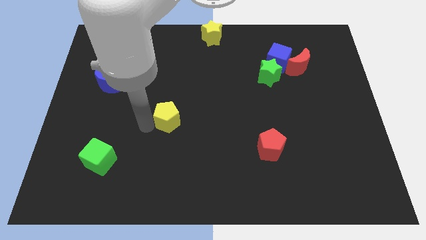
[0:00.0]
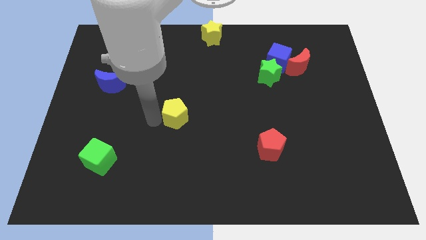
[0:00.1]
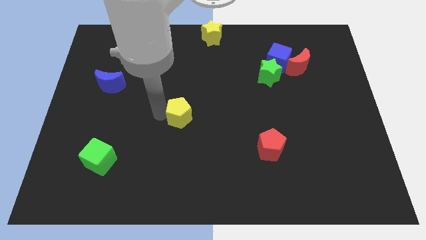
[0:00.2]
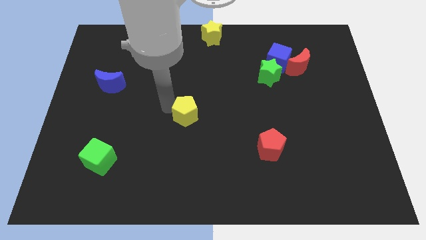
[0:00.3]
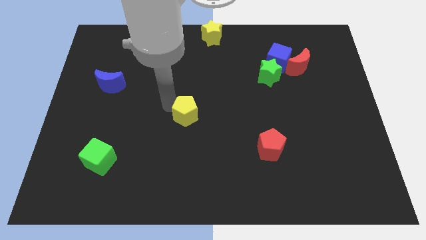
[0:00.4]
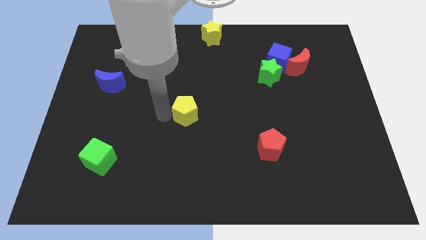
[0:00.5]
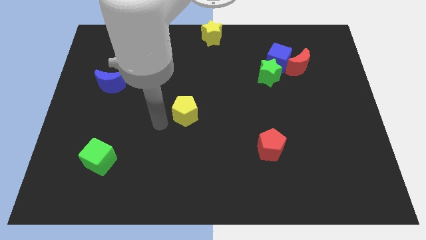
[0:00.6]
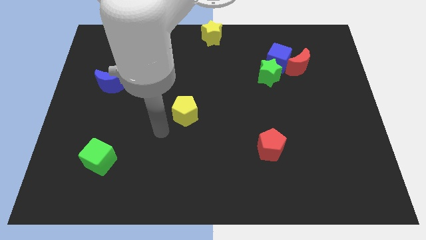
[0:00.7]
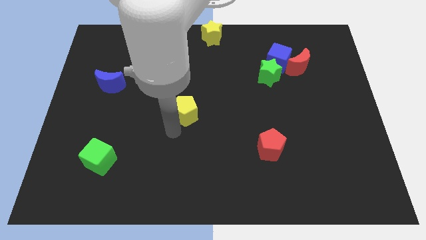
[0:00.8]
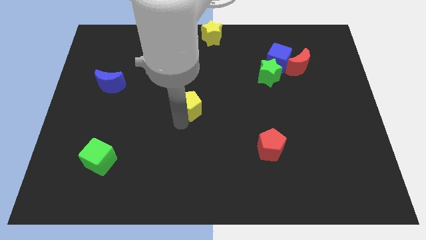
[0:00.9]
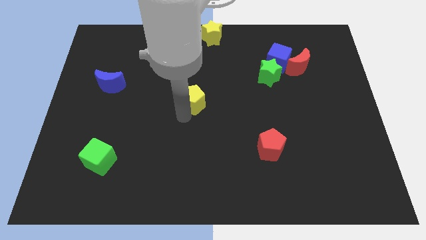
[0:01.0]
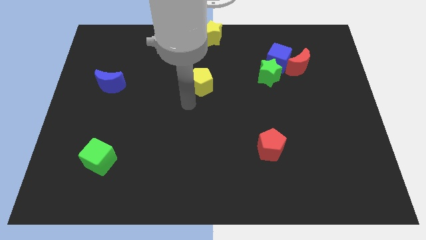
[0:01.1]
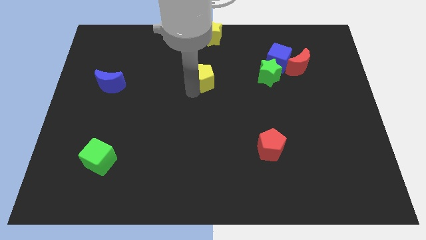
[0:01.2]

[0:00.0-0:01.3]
drag the yellow pentagon parallel right to the blue moon

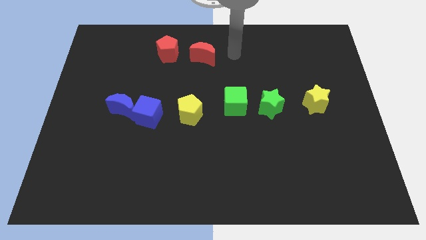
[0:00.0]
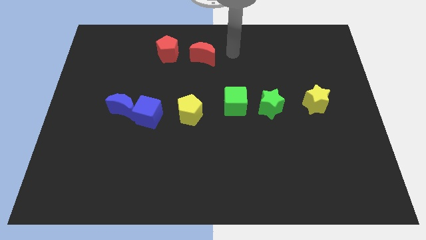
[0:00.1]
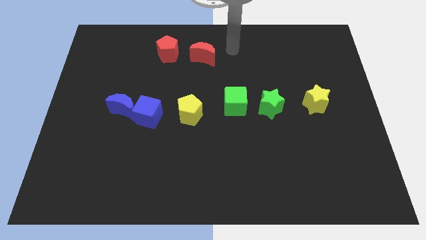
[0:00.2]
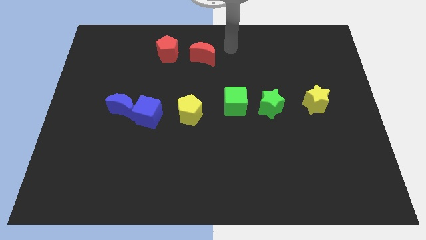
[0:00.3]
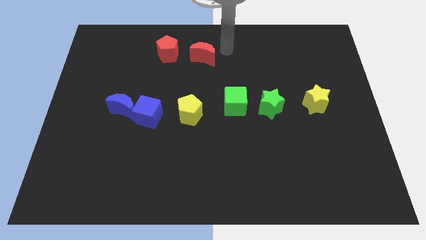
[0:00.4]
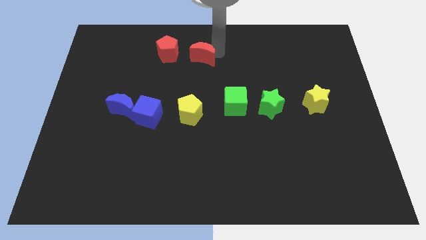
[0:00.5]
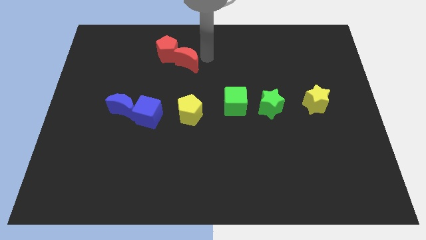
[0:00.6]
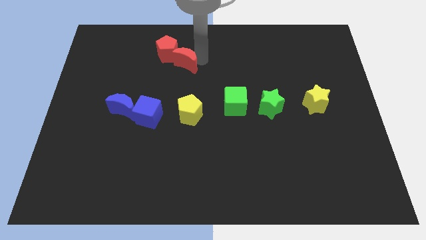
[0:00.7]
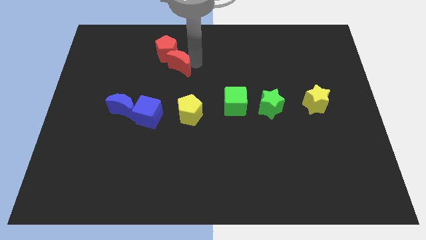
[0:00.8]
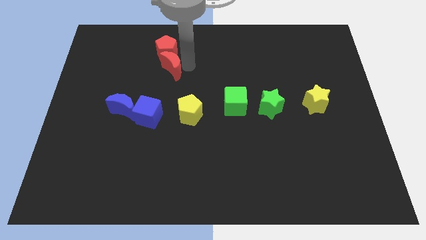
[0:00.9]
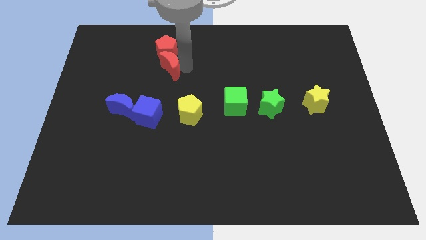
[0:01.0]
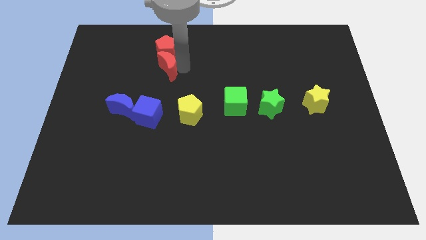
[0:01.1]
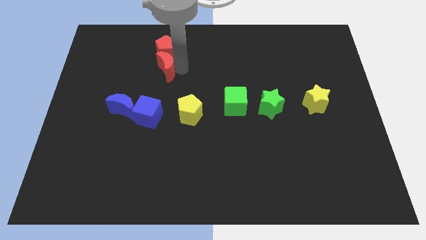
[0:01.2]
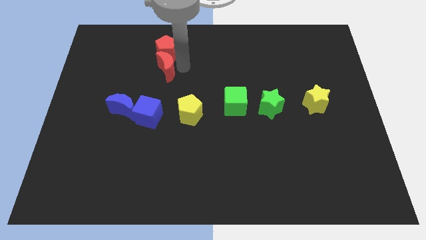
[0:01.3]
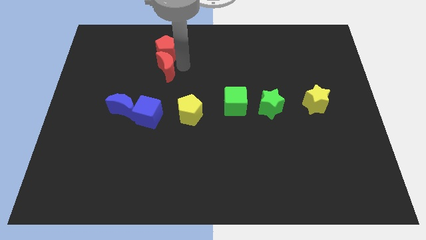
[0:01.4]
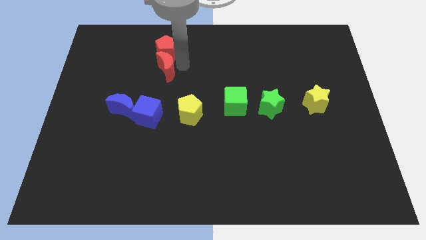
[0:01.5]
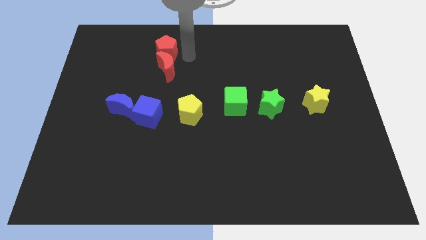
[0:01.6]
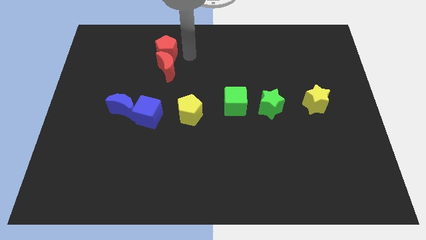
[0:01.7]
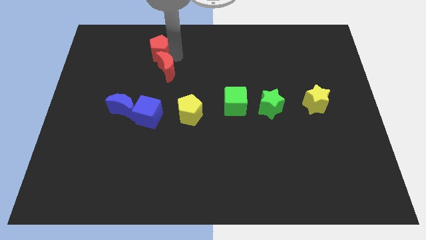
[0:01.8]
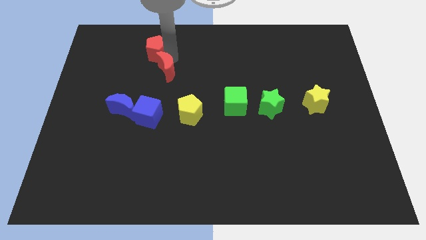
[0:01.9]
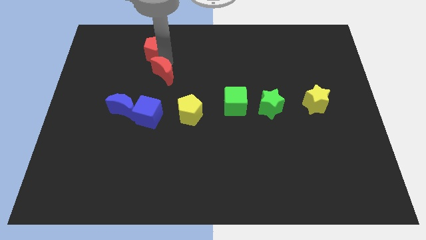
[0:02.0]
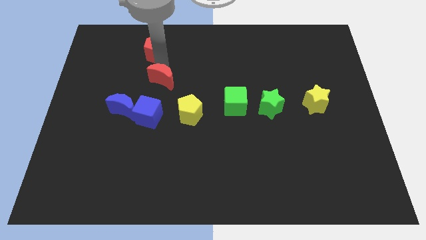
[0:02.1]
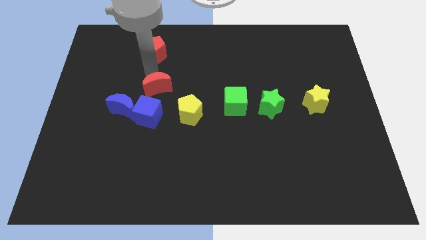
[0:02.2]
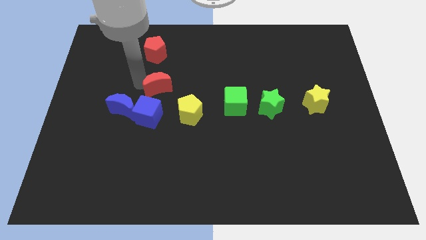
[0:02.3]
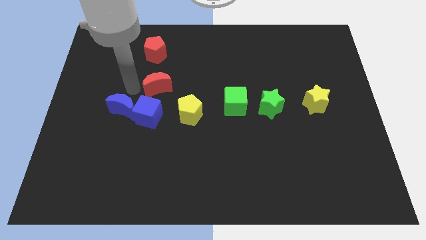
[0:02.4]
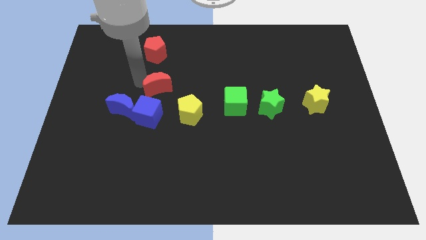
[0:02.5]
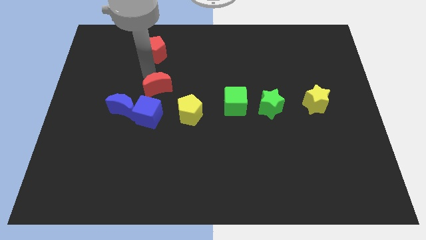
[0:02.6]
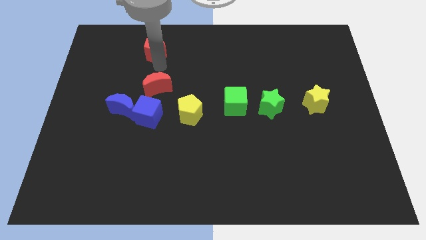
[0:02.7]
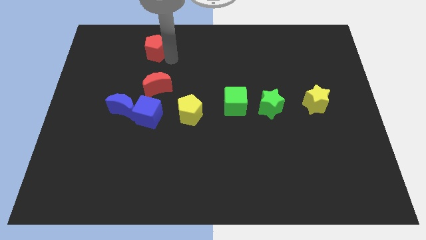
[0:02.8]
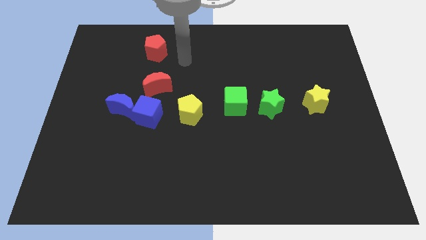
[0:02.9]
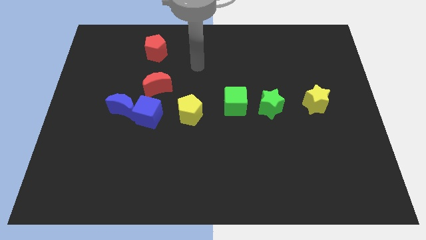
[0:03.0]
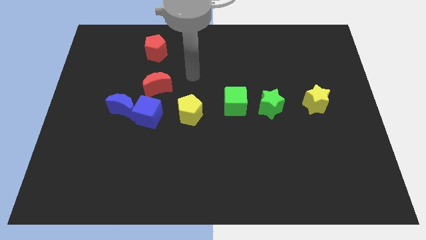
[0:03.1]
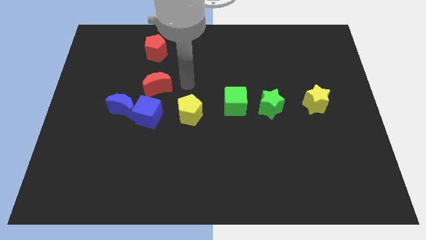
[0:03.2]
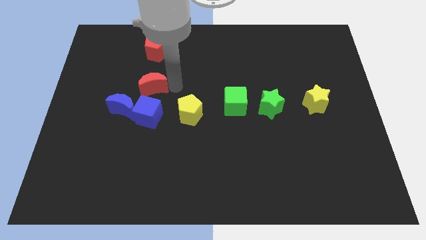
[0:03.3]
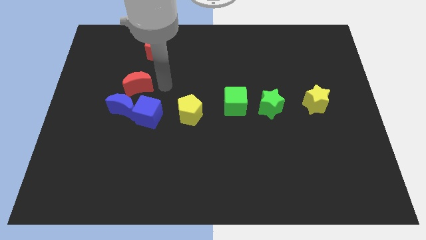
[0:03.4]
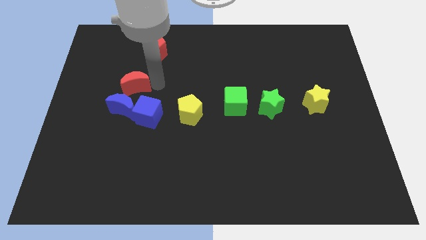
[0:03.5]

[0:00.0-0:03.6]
place red moon above the blue cube

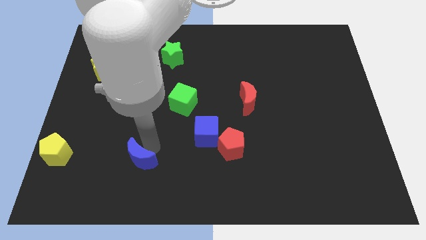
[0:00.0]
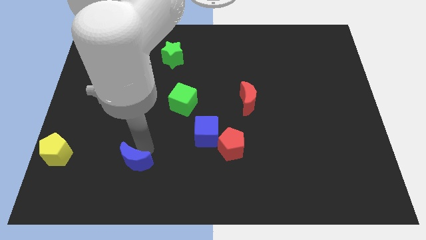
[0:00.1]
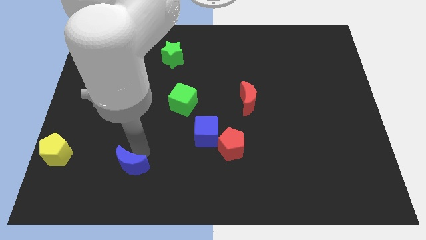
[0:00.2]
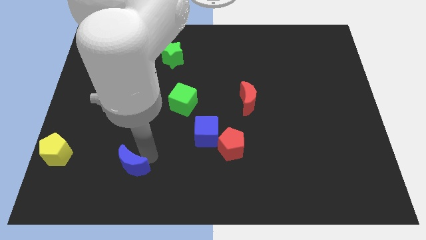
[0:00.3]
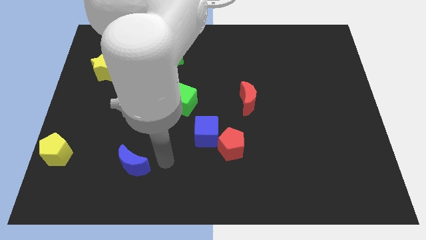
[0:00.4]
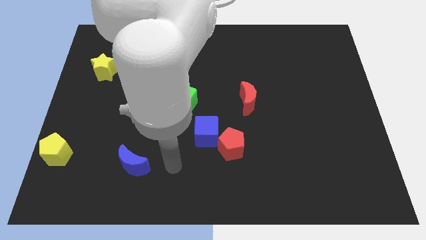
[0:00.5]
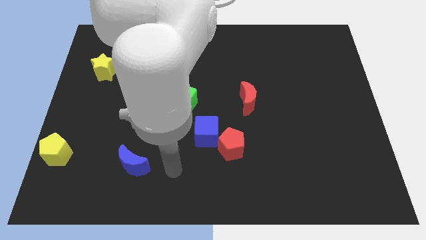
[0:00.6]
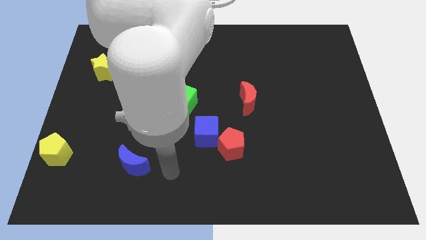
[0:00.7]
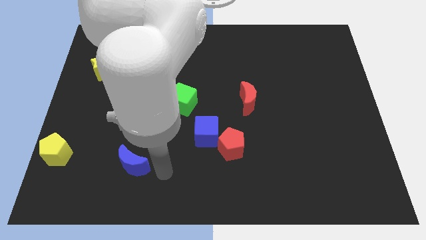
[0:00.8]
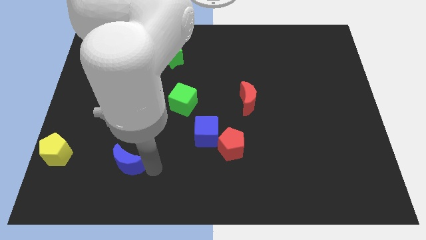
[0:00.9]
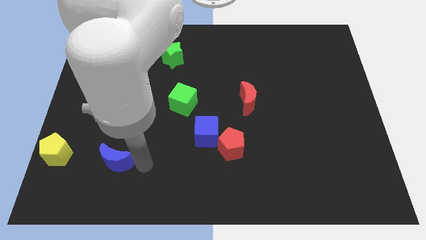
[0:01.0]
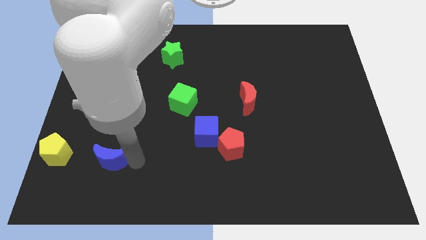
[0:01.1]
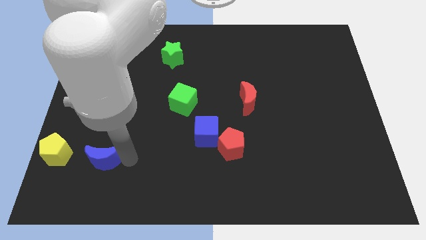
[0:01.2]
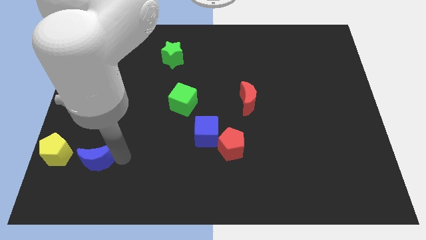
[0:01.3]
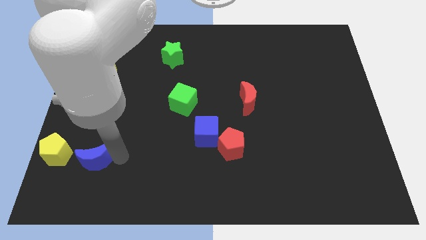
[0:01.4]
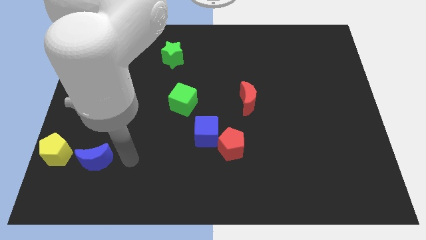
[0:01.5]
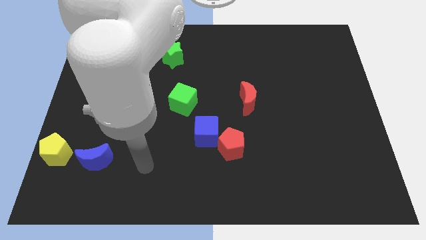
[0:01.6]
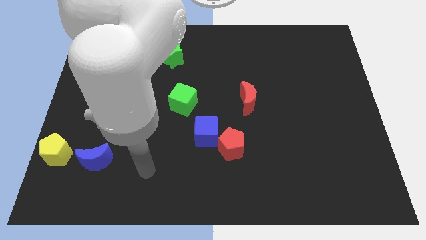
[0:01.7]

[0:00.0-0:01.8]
place the blue moon right to the yellow pentagon

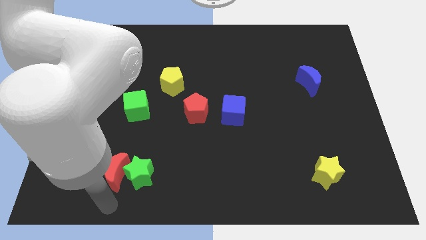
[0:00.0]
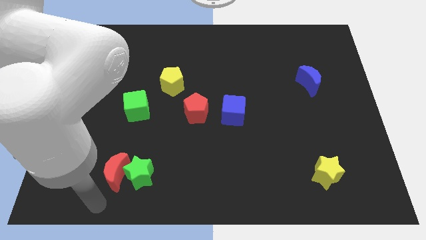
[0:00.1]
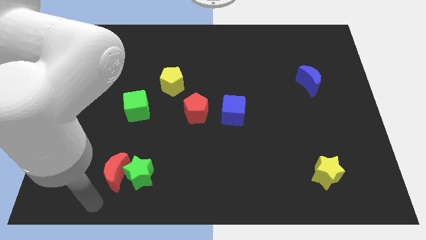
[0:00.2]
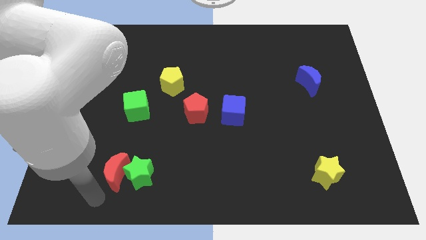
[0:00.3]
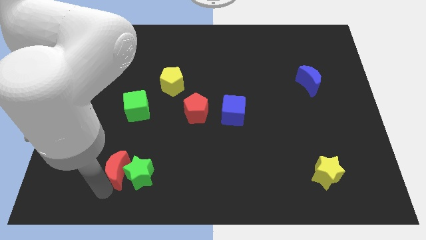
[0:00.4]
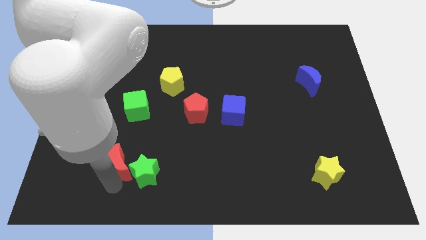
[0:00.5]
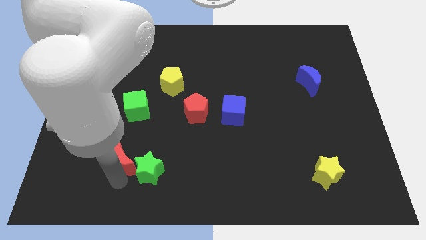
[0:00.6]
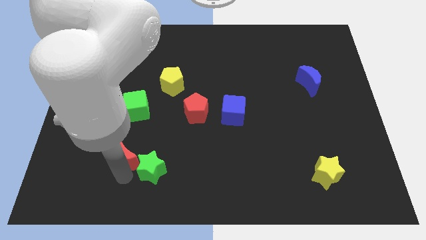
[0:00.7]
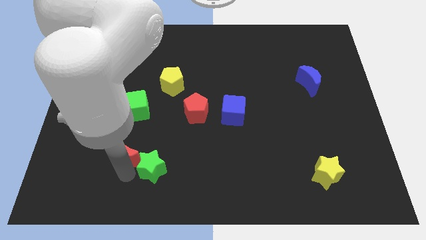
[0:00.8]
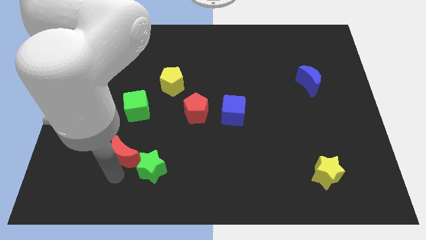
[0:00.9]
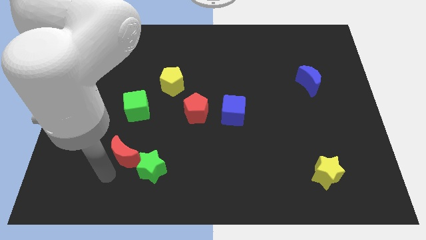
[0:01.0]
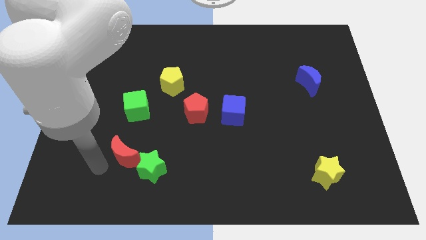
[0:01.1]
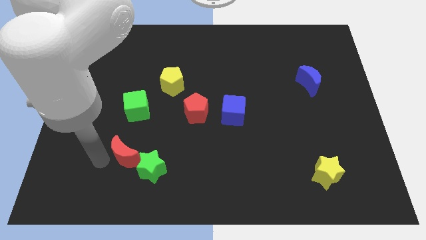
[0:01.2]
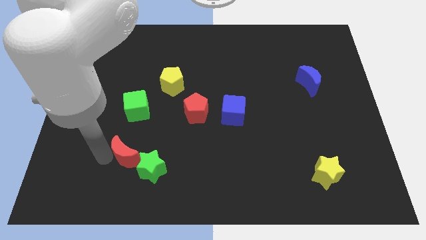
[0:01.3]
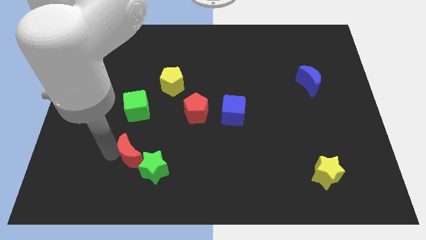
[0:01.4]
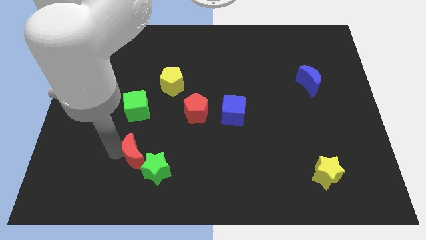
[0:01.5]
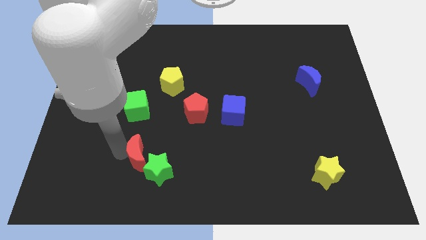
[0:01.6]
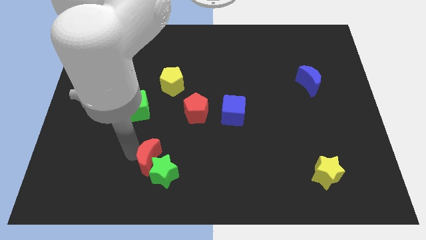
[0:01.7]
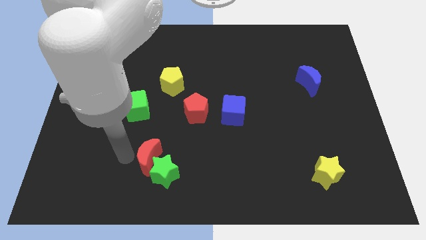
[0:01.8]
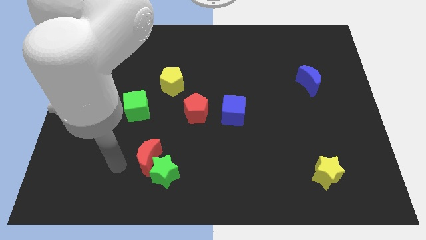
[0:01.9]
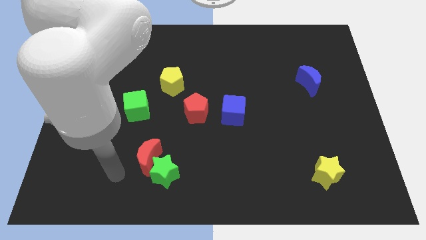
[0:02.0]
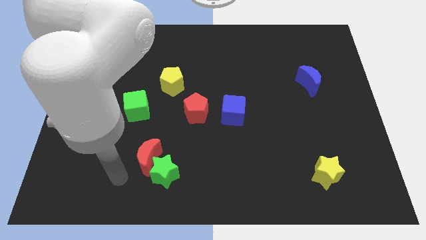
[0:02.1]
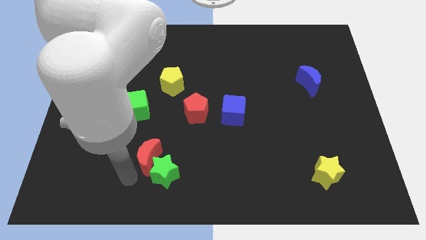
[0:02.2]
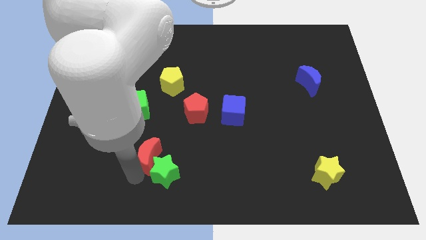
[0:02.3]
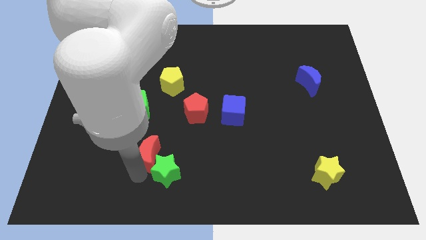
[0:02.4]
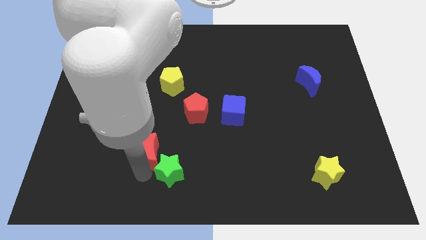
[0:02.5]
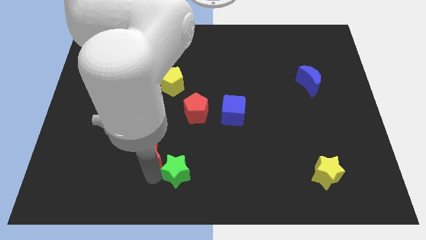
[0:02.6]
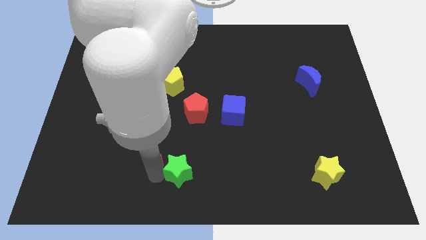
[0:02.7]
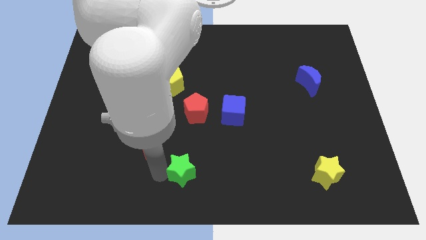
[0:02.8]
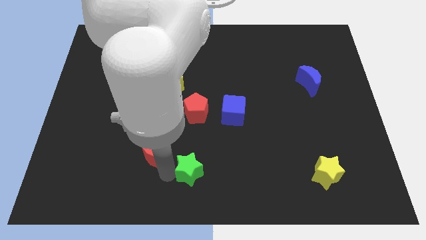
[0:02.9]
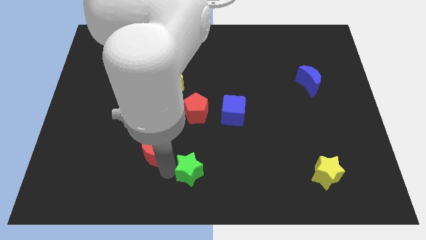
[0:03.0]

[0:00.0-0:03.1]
push the red crescent slightly upwards along with the green star
